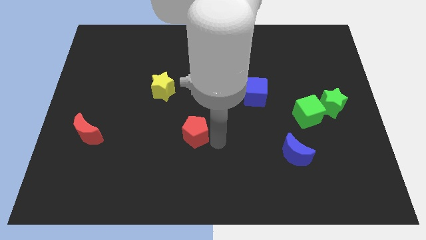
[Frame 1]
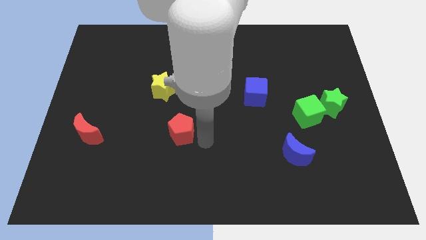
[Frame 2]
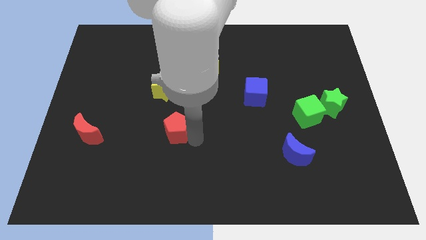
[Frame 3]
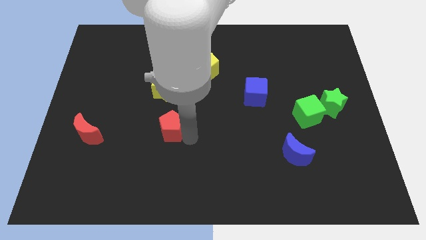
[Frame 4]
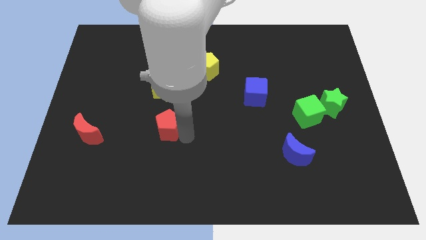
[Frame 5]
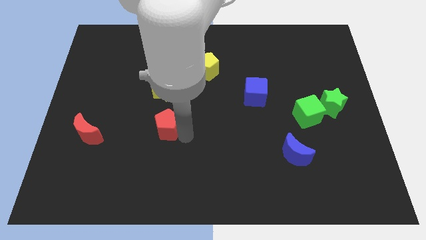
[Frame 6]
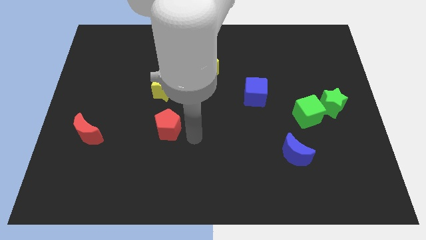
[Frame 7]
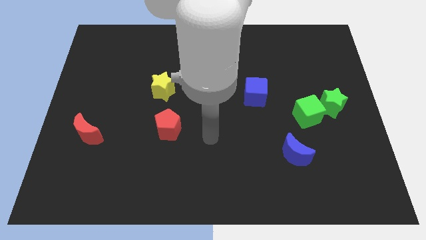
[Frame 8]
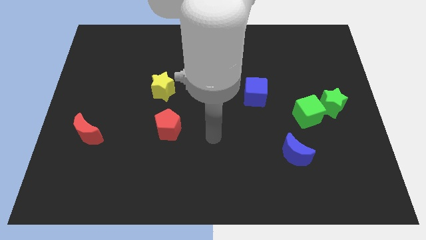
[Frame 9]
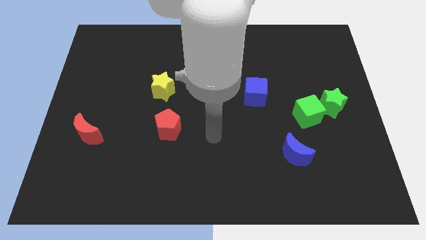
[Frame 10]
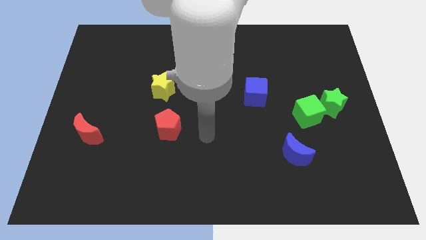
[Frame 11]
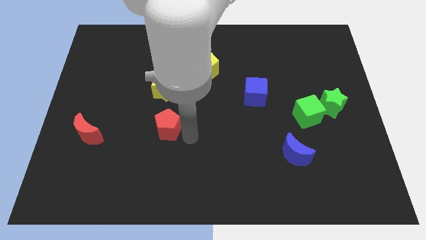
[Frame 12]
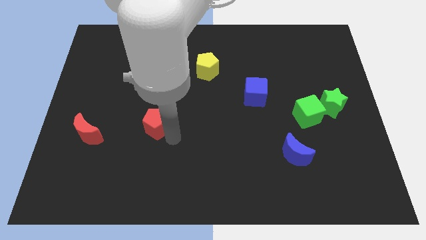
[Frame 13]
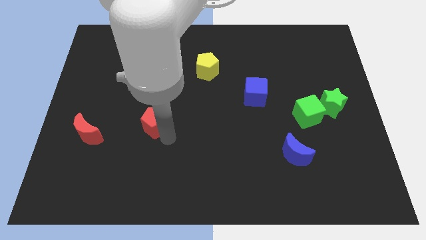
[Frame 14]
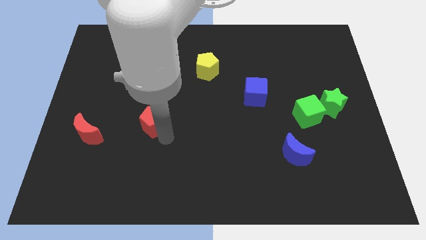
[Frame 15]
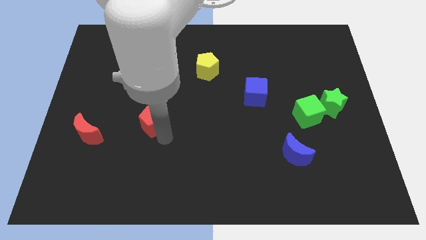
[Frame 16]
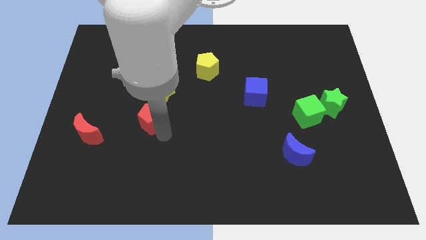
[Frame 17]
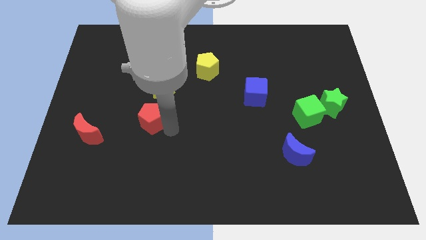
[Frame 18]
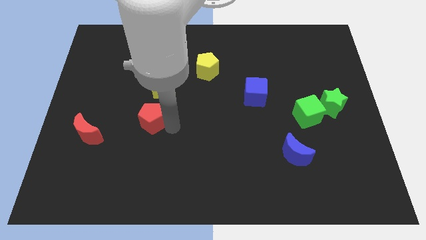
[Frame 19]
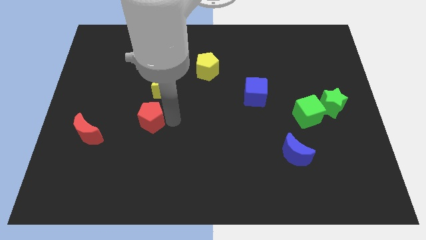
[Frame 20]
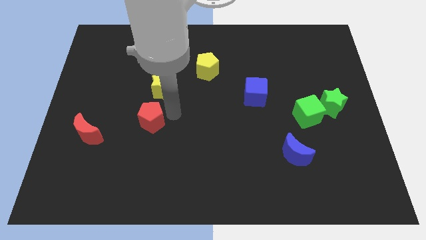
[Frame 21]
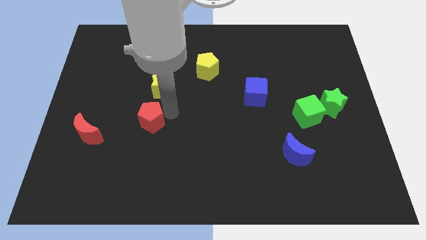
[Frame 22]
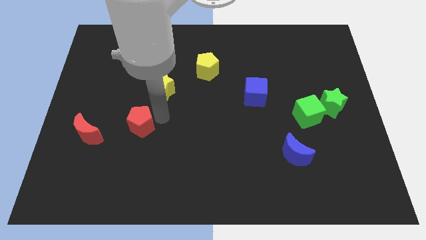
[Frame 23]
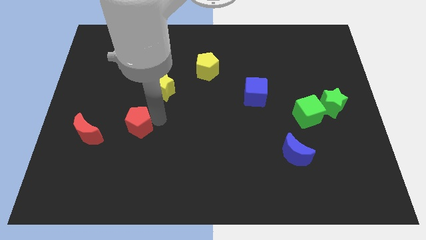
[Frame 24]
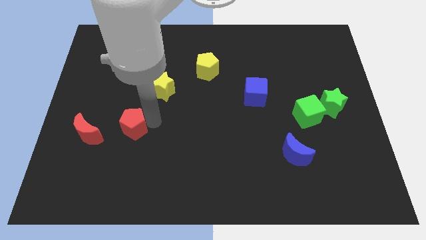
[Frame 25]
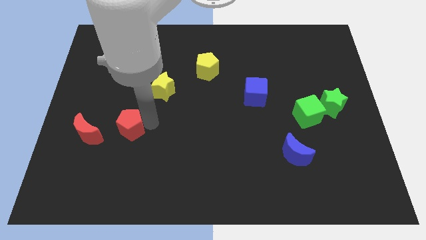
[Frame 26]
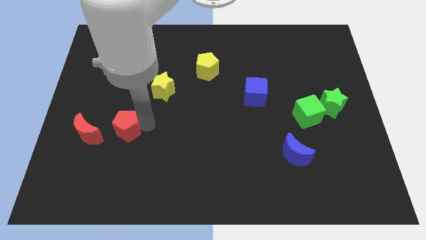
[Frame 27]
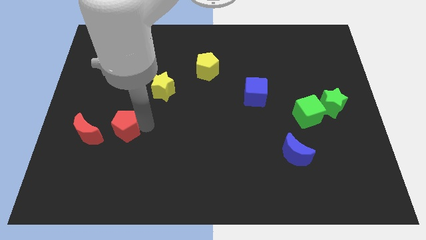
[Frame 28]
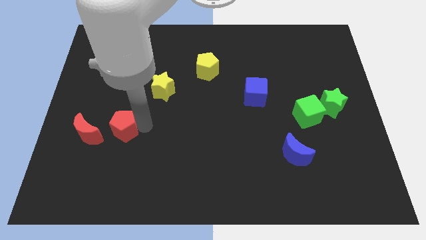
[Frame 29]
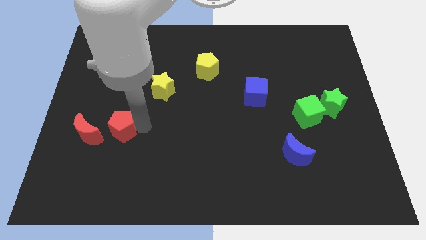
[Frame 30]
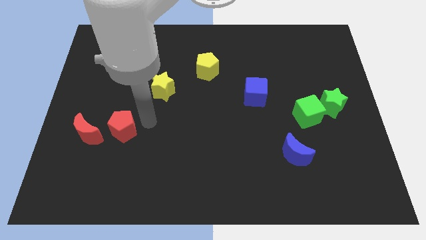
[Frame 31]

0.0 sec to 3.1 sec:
move red pentagon close to the red moon

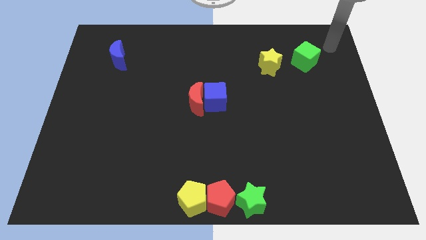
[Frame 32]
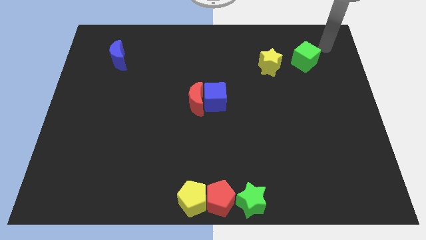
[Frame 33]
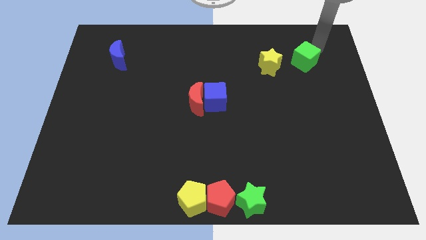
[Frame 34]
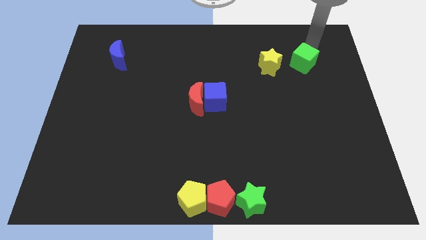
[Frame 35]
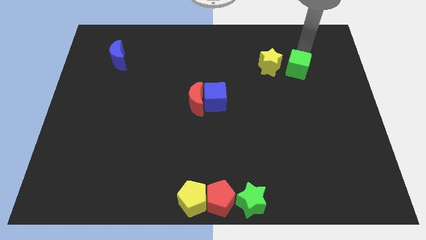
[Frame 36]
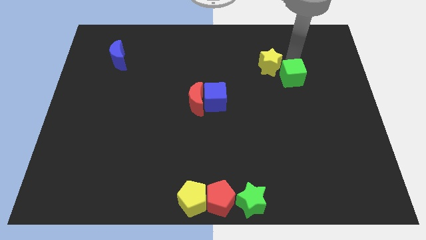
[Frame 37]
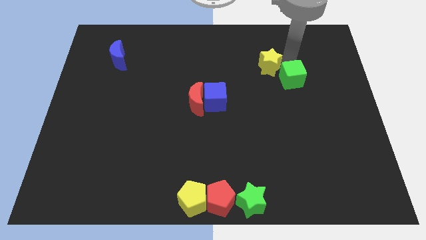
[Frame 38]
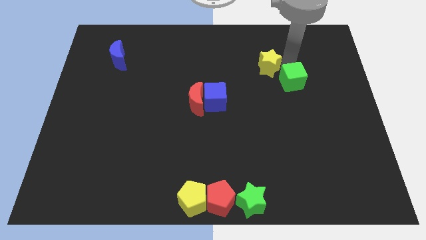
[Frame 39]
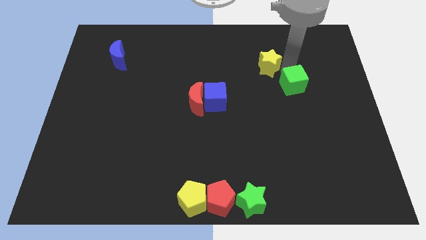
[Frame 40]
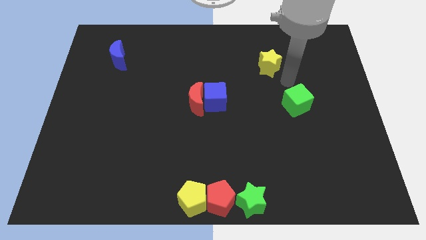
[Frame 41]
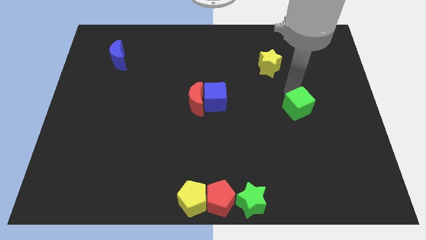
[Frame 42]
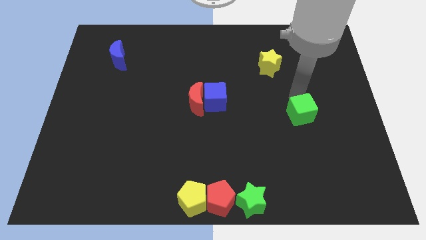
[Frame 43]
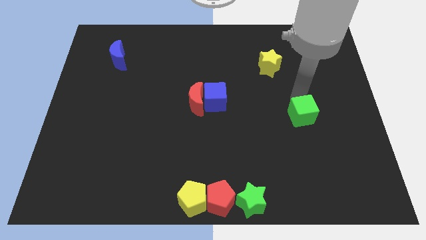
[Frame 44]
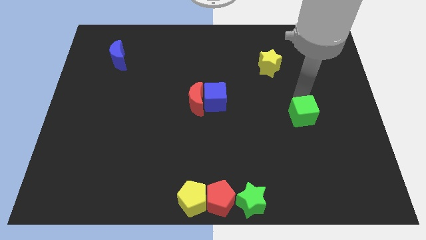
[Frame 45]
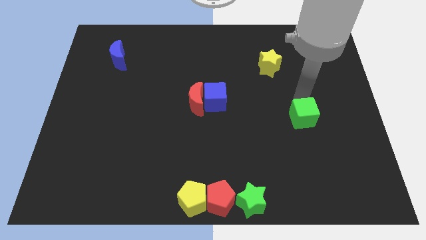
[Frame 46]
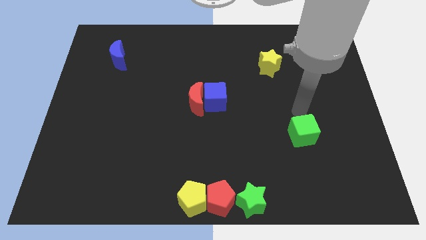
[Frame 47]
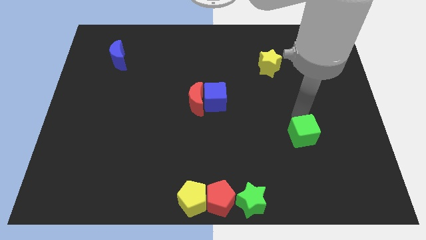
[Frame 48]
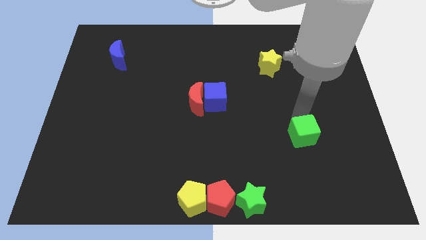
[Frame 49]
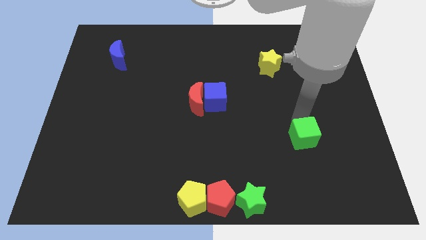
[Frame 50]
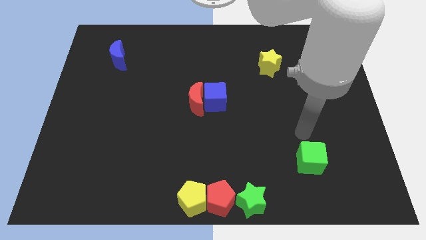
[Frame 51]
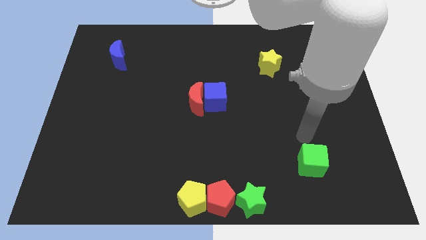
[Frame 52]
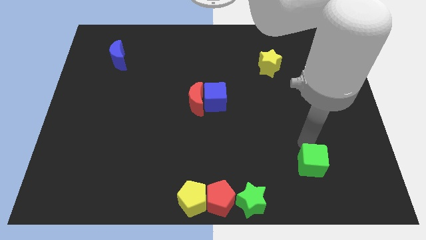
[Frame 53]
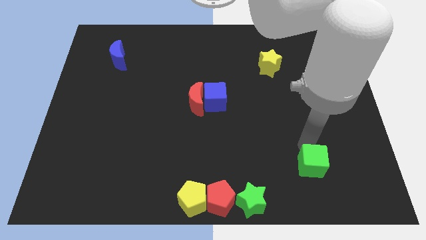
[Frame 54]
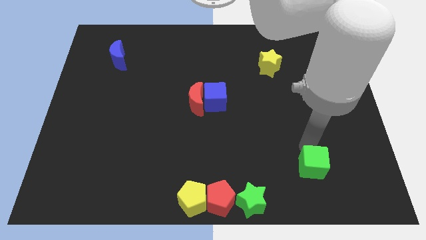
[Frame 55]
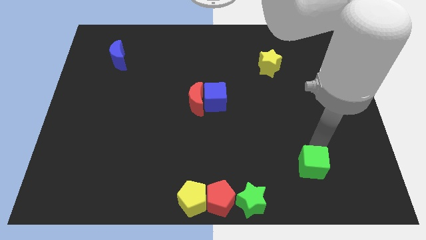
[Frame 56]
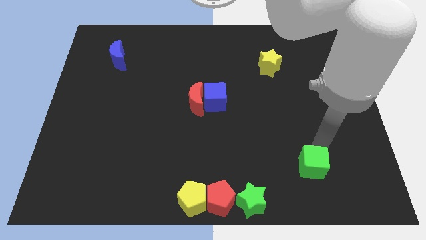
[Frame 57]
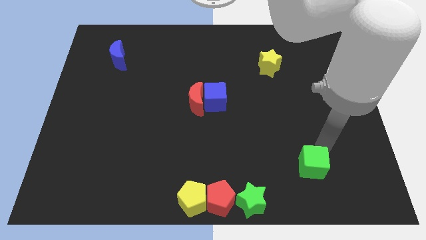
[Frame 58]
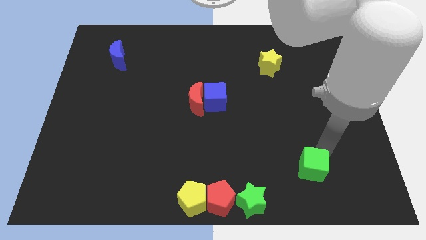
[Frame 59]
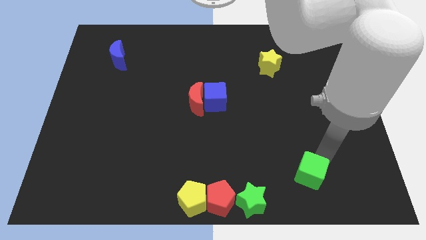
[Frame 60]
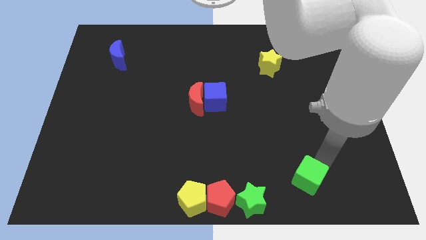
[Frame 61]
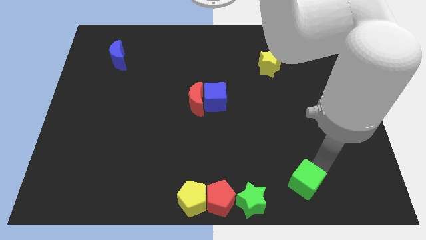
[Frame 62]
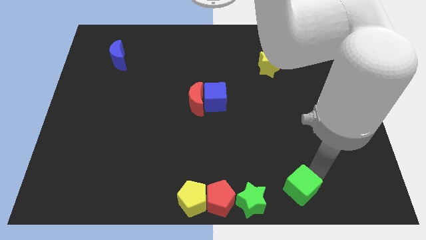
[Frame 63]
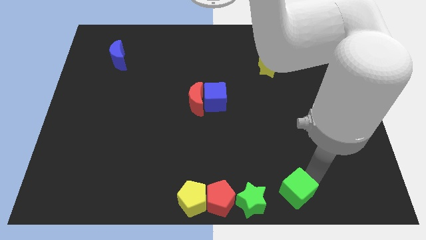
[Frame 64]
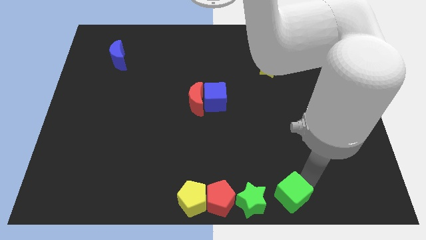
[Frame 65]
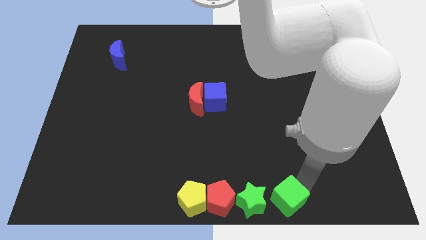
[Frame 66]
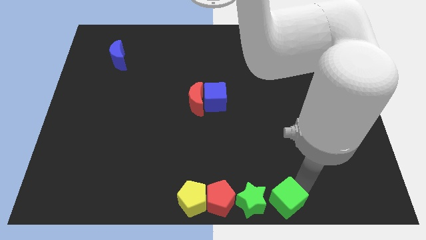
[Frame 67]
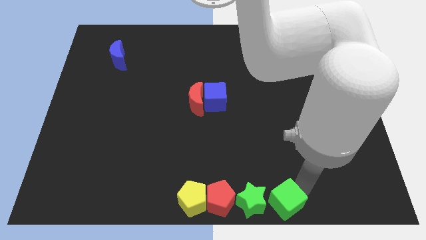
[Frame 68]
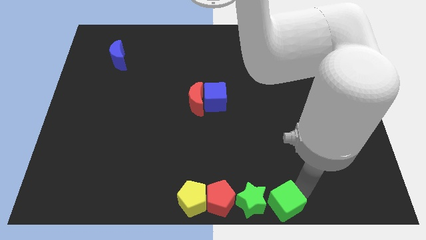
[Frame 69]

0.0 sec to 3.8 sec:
push the green cube to the right of the green star

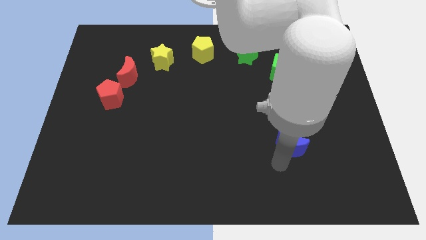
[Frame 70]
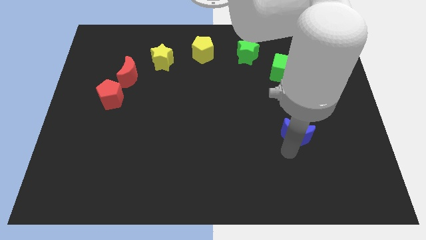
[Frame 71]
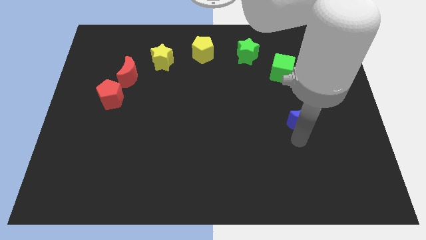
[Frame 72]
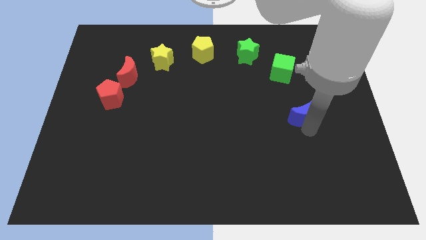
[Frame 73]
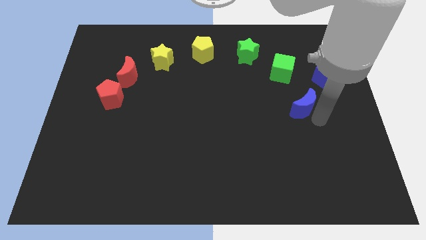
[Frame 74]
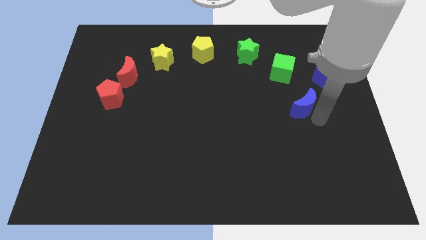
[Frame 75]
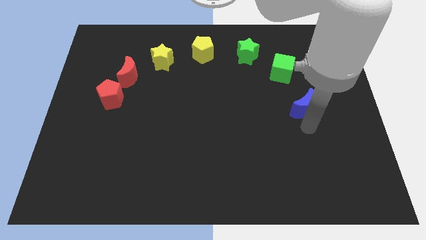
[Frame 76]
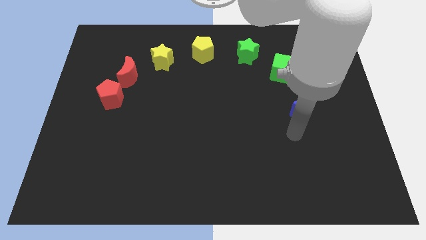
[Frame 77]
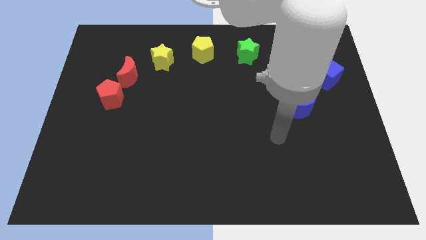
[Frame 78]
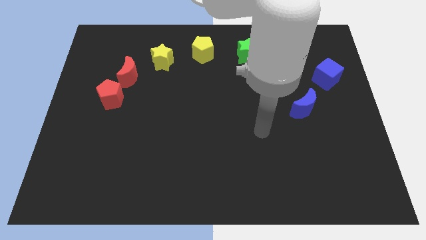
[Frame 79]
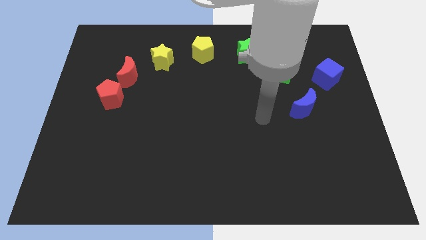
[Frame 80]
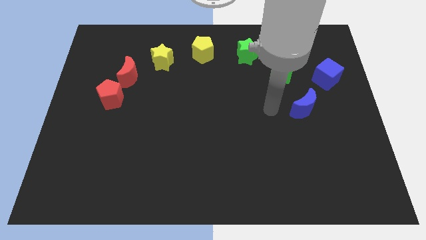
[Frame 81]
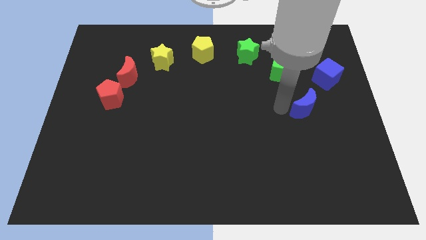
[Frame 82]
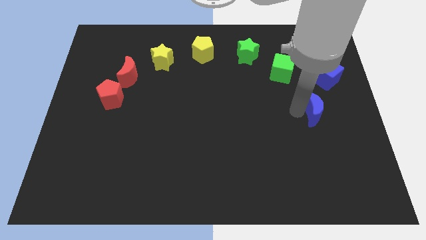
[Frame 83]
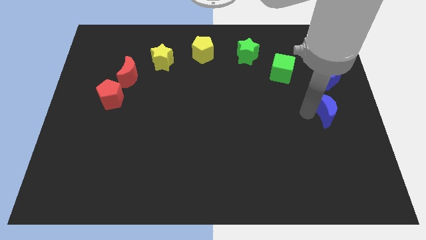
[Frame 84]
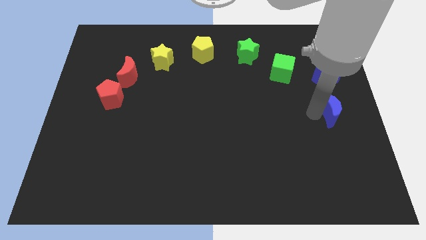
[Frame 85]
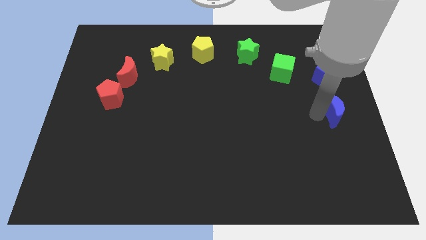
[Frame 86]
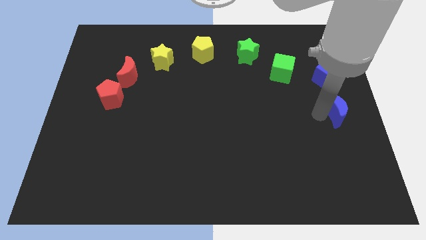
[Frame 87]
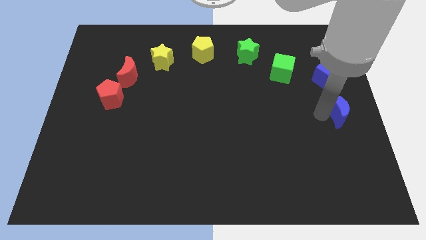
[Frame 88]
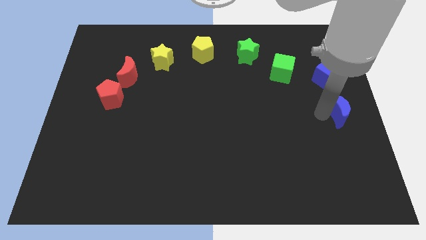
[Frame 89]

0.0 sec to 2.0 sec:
place blue moon below blue cube

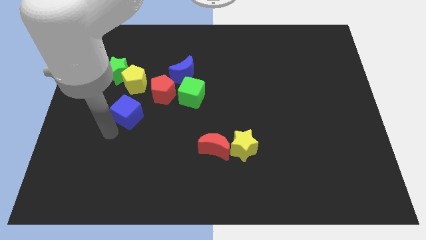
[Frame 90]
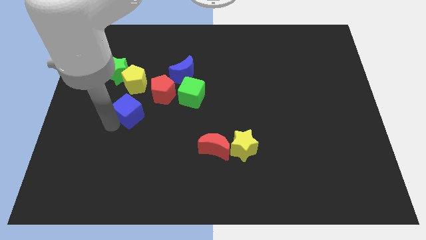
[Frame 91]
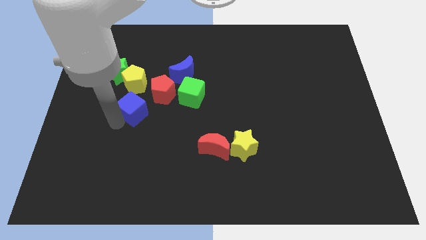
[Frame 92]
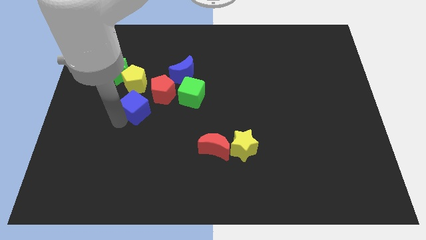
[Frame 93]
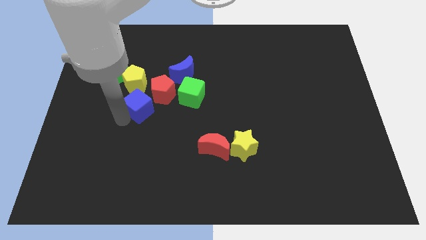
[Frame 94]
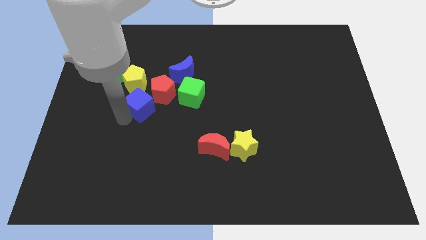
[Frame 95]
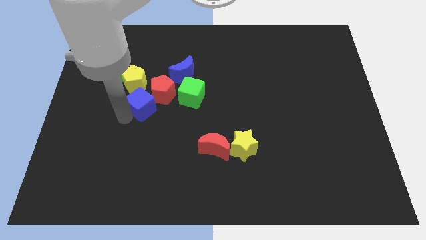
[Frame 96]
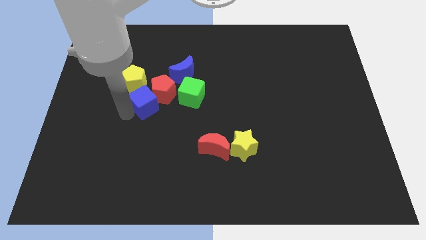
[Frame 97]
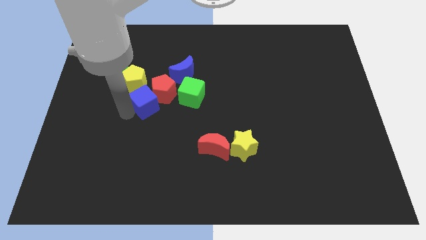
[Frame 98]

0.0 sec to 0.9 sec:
move the blue block into the red pentagon
